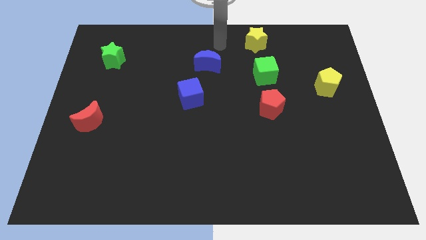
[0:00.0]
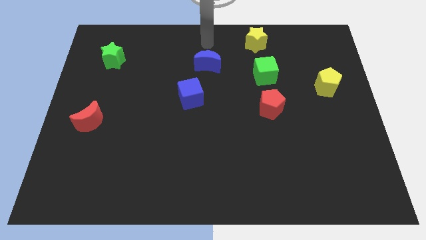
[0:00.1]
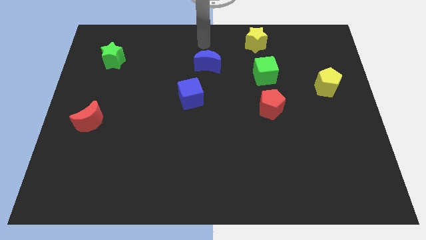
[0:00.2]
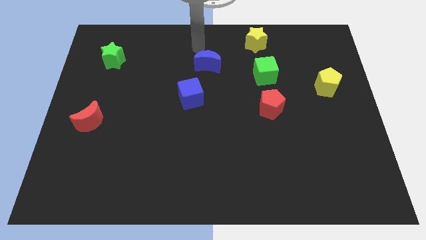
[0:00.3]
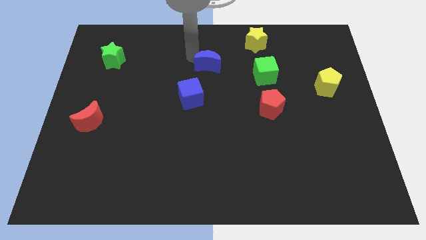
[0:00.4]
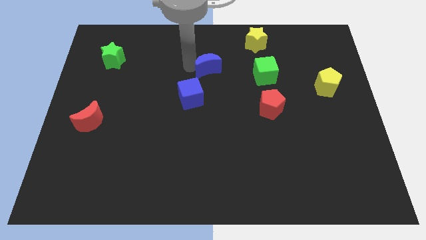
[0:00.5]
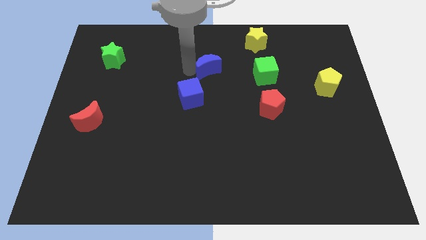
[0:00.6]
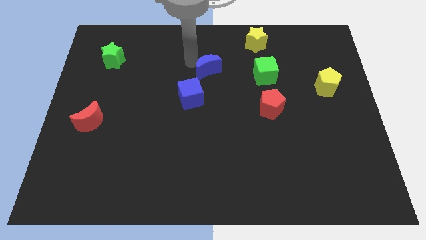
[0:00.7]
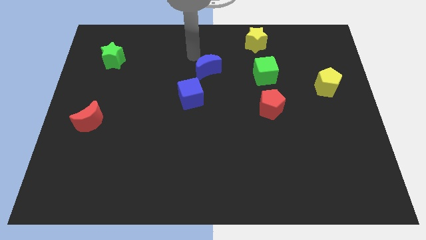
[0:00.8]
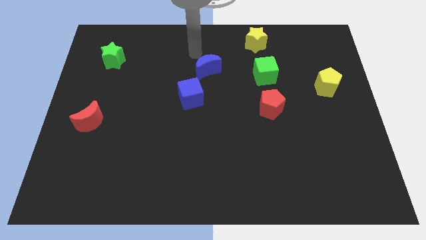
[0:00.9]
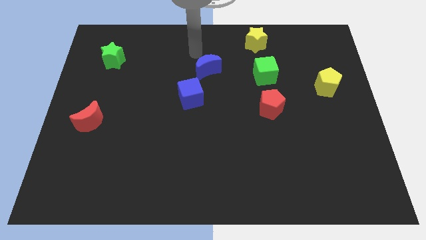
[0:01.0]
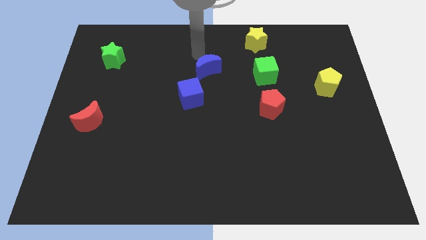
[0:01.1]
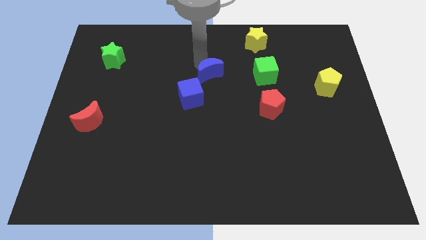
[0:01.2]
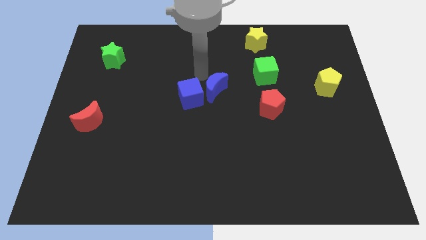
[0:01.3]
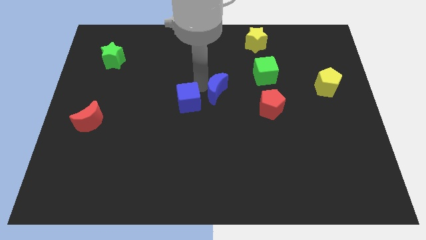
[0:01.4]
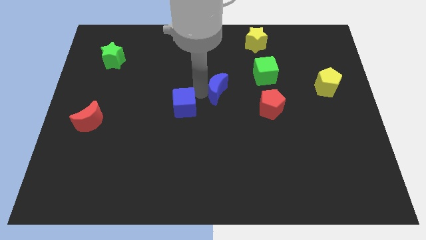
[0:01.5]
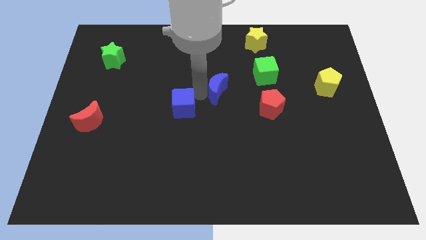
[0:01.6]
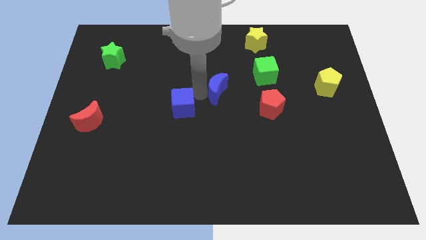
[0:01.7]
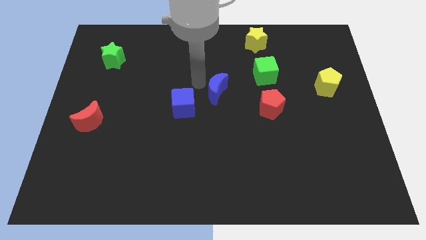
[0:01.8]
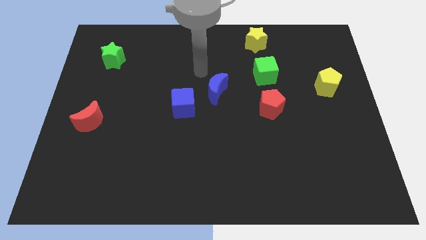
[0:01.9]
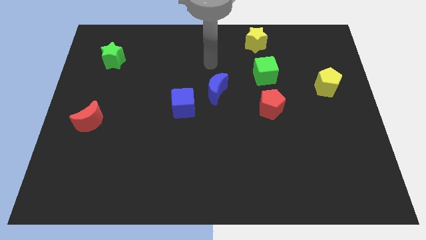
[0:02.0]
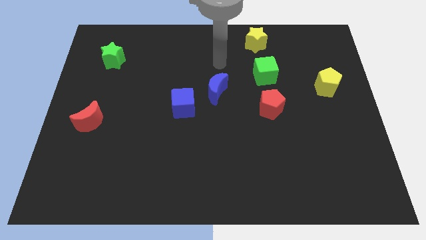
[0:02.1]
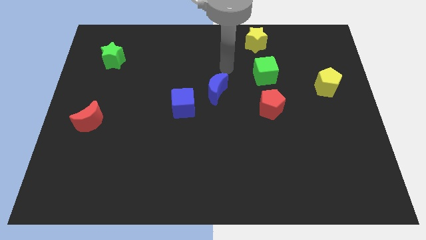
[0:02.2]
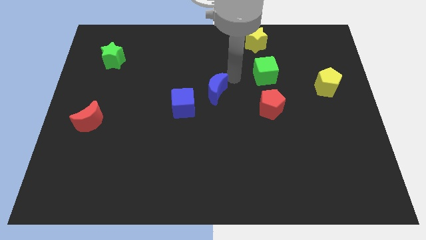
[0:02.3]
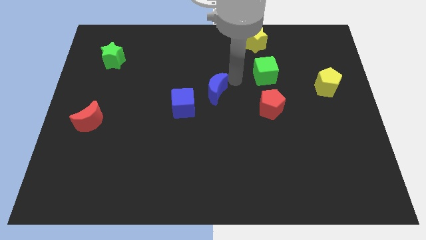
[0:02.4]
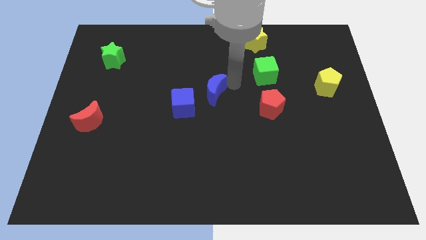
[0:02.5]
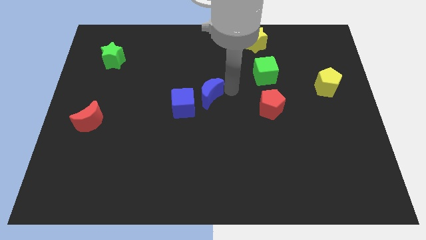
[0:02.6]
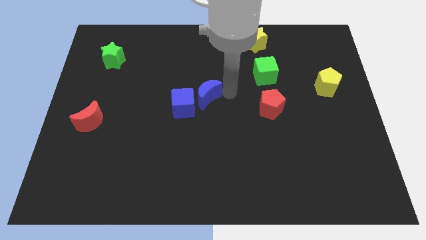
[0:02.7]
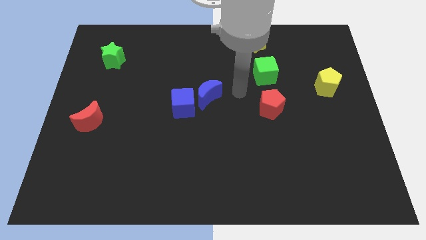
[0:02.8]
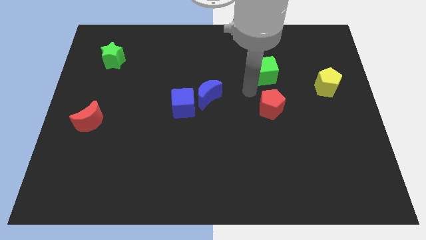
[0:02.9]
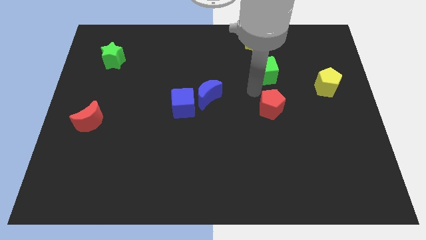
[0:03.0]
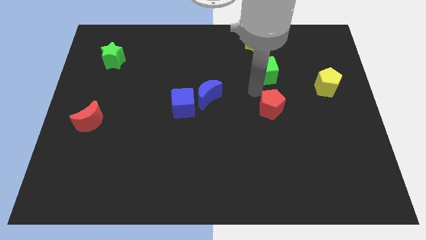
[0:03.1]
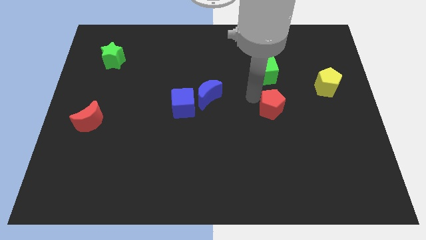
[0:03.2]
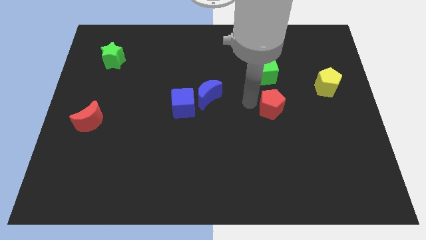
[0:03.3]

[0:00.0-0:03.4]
move the blue crescent to the center of the board

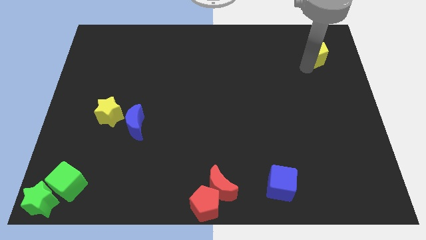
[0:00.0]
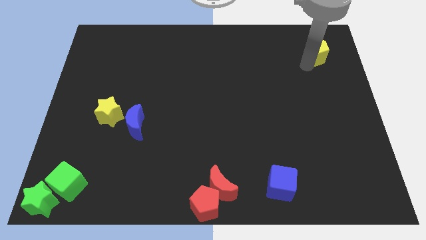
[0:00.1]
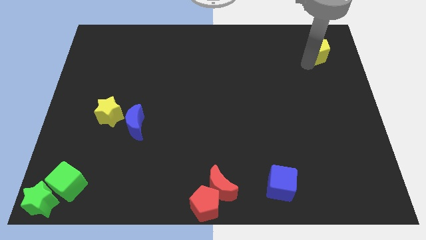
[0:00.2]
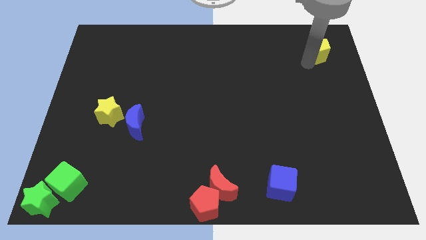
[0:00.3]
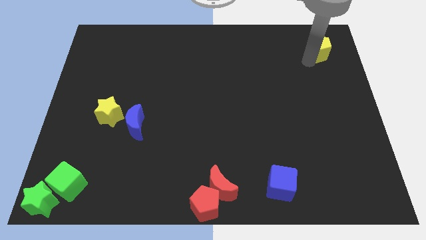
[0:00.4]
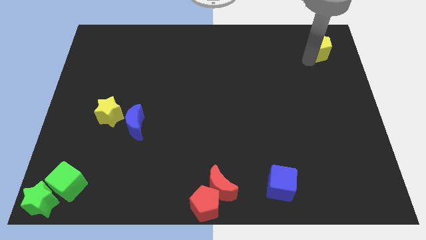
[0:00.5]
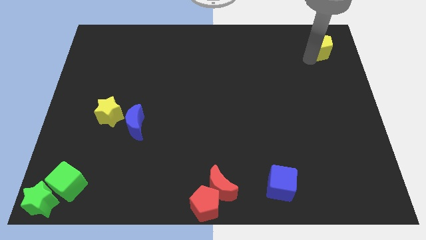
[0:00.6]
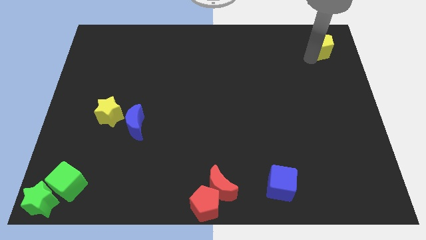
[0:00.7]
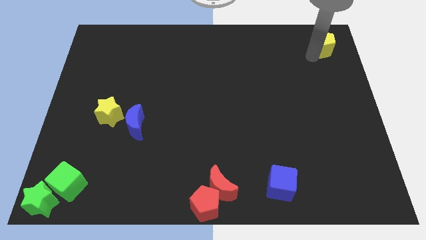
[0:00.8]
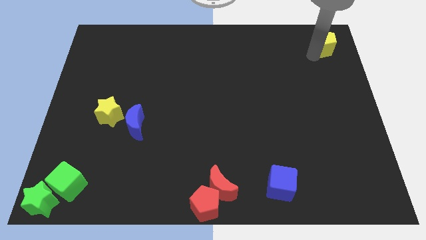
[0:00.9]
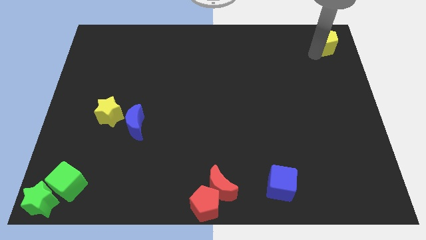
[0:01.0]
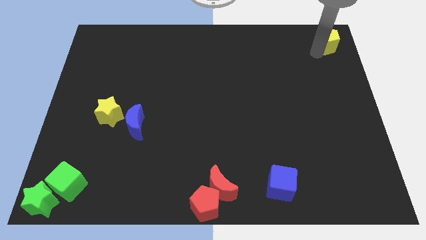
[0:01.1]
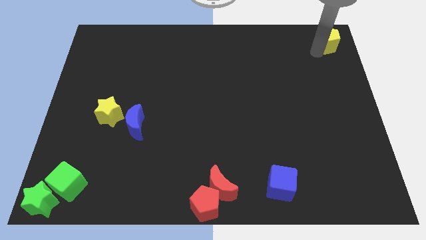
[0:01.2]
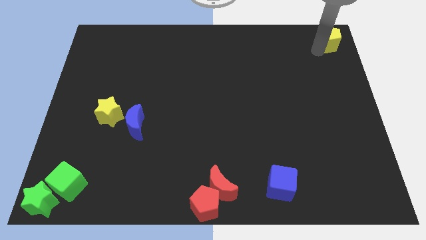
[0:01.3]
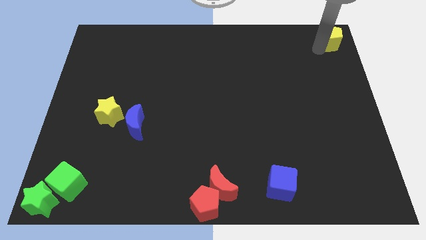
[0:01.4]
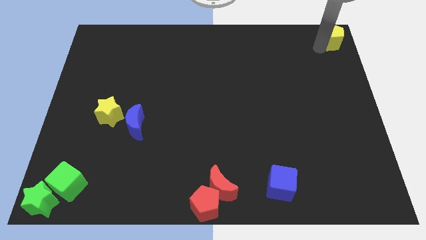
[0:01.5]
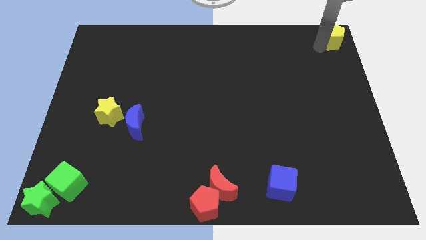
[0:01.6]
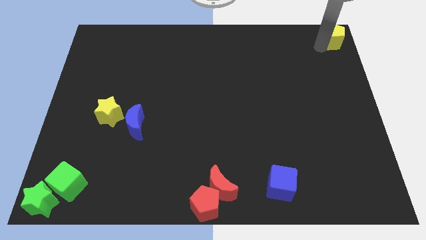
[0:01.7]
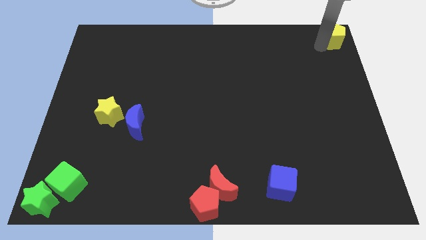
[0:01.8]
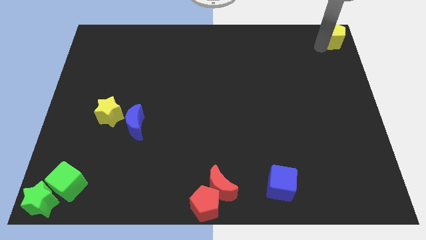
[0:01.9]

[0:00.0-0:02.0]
push the yellow pentagon to the top right of the board

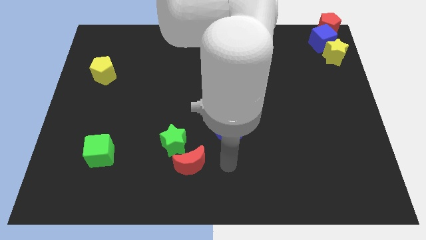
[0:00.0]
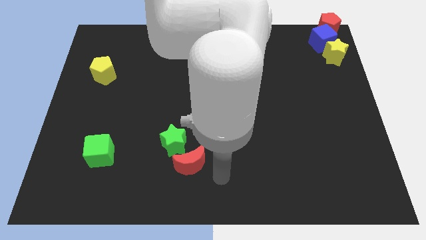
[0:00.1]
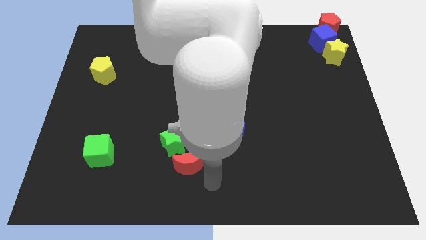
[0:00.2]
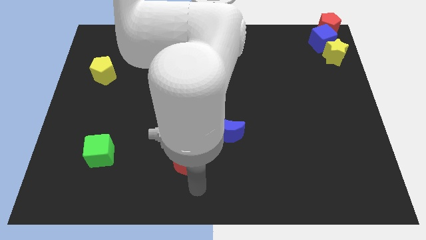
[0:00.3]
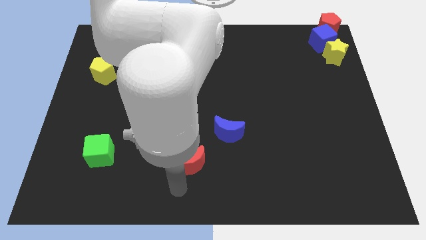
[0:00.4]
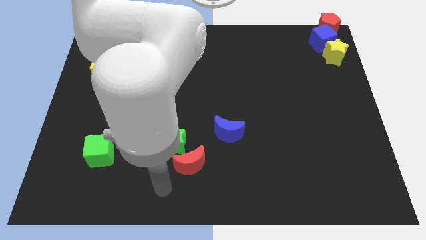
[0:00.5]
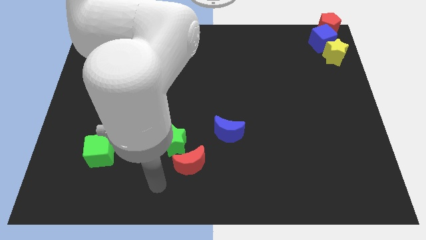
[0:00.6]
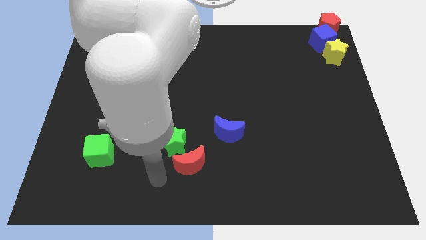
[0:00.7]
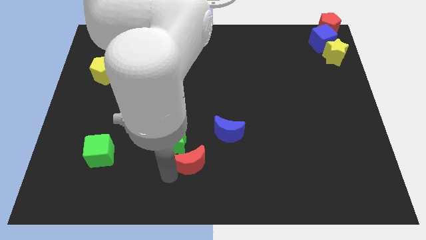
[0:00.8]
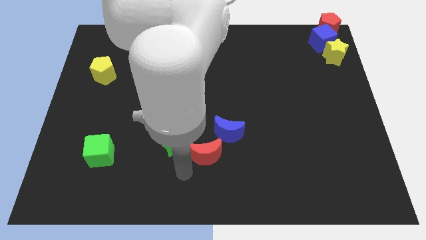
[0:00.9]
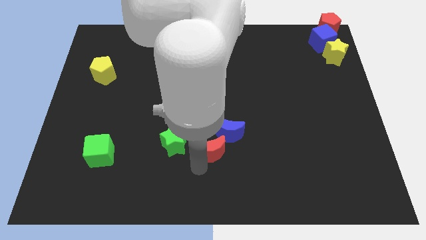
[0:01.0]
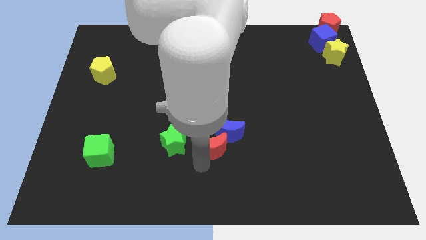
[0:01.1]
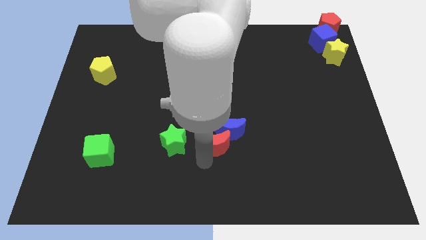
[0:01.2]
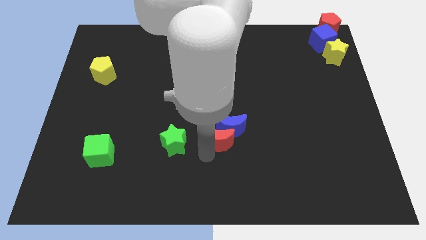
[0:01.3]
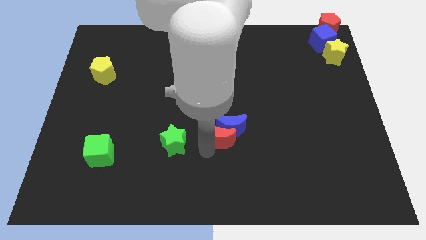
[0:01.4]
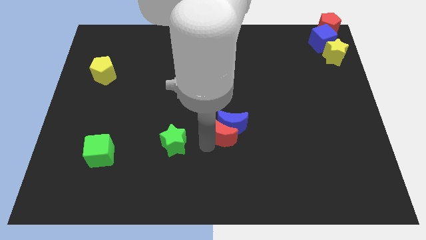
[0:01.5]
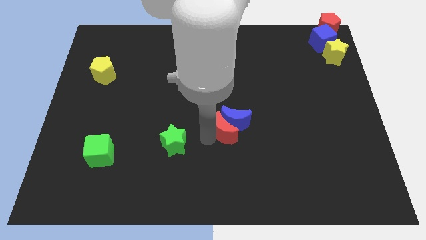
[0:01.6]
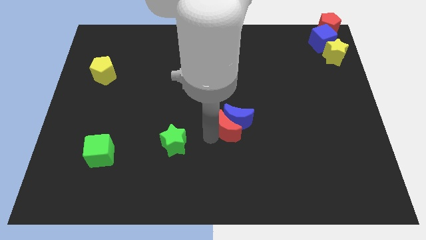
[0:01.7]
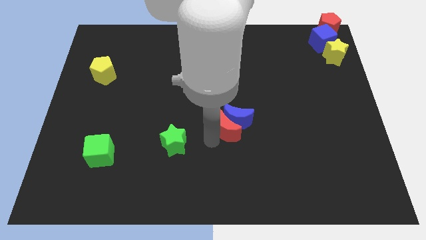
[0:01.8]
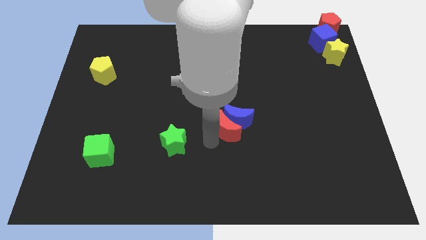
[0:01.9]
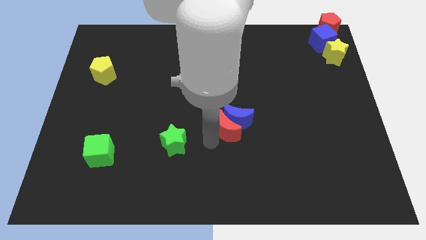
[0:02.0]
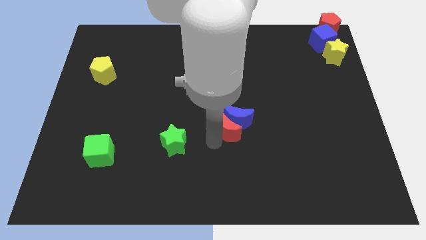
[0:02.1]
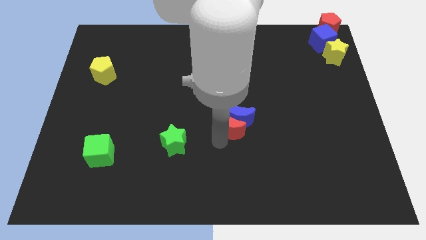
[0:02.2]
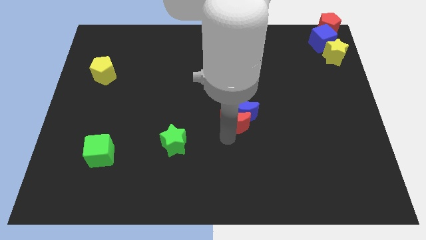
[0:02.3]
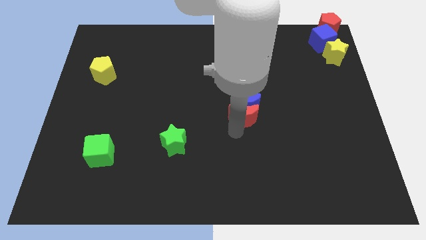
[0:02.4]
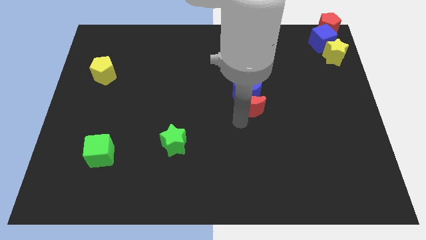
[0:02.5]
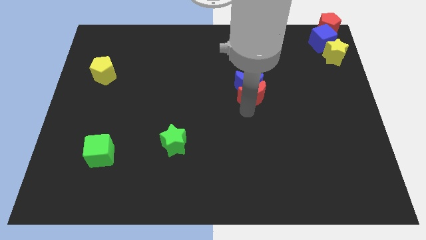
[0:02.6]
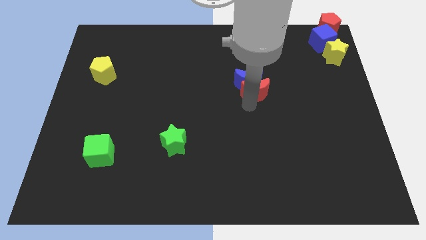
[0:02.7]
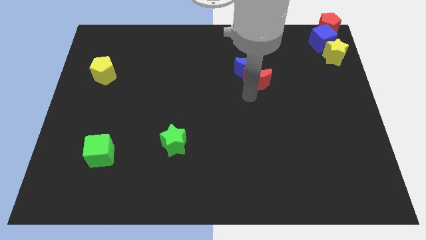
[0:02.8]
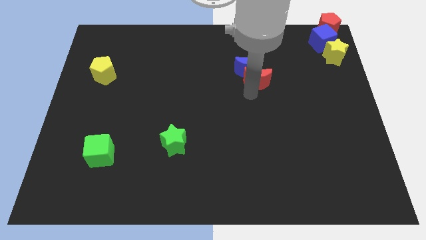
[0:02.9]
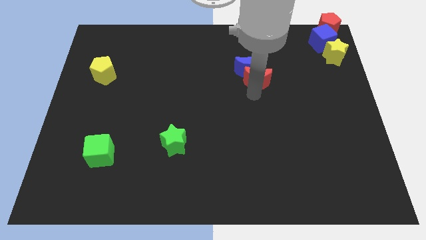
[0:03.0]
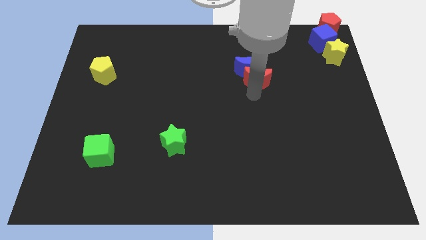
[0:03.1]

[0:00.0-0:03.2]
push the red crescent into the blue moon

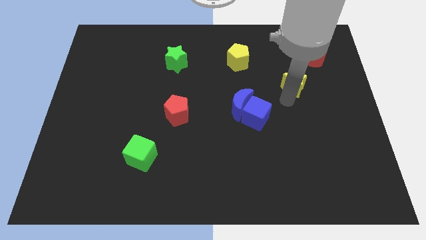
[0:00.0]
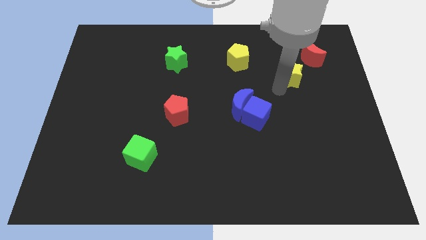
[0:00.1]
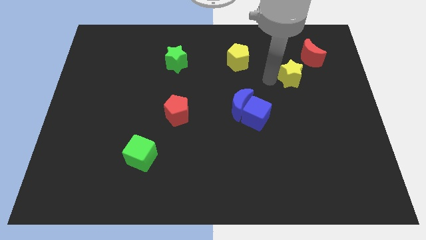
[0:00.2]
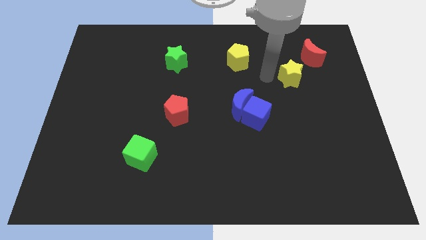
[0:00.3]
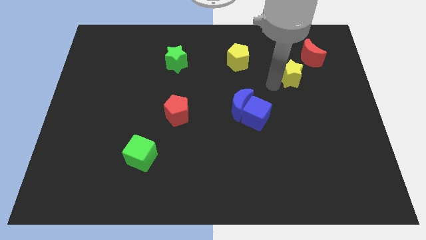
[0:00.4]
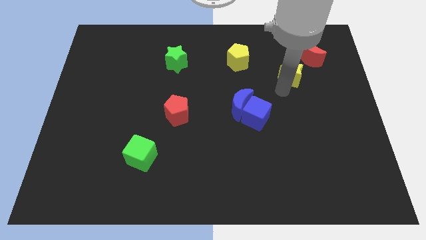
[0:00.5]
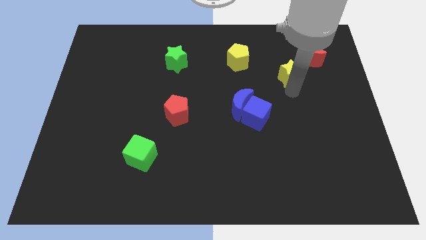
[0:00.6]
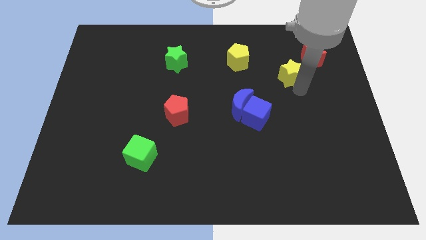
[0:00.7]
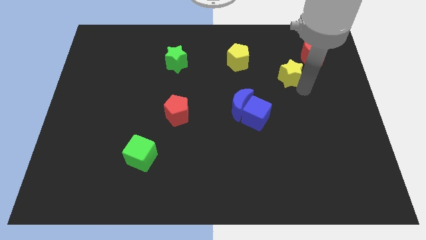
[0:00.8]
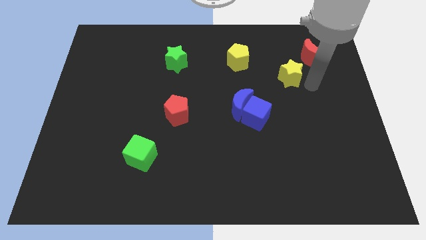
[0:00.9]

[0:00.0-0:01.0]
move yellow star slightly towards yellow pentgaon
